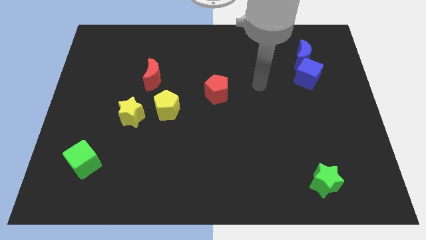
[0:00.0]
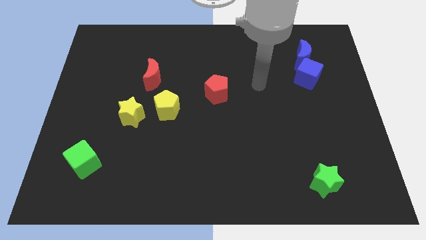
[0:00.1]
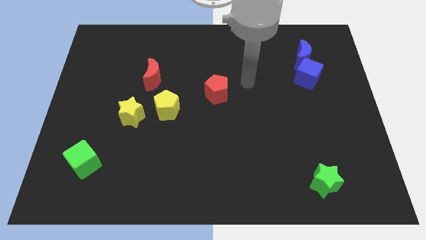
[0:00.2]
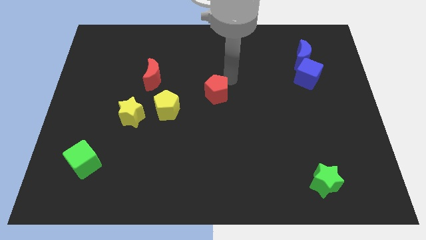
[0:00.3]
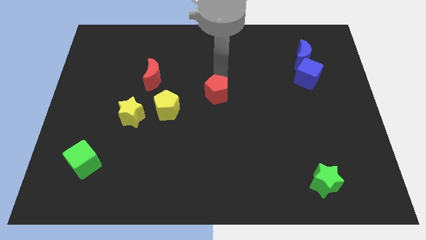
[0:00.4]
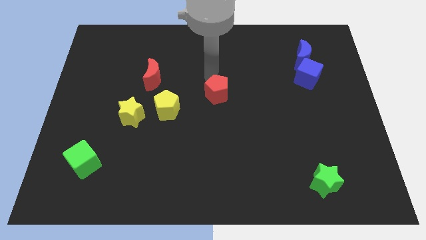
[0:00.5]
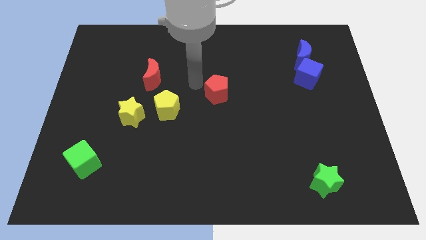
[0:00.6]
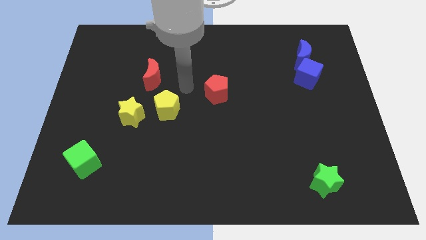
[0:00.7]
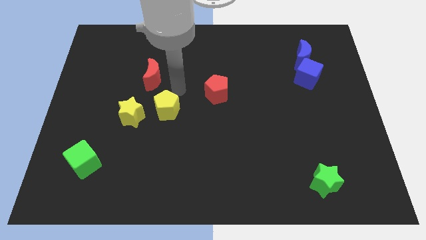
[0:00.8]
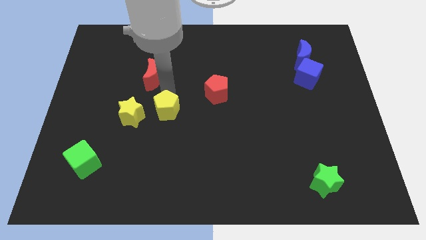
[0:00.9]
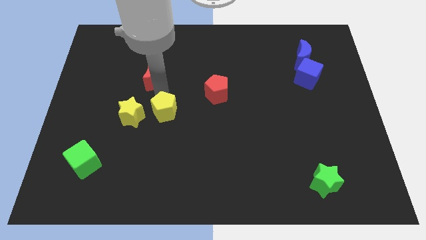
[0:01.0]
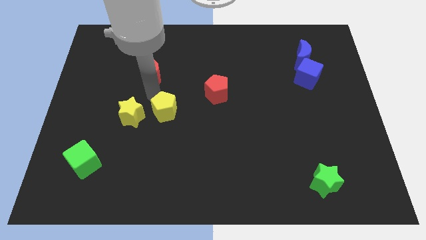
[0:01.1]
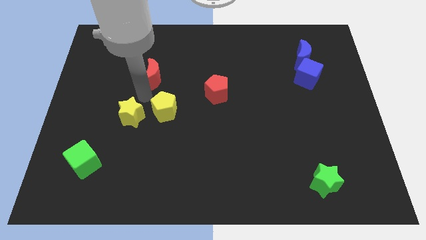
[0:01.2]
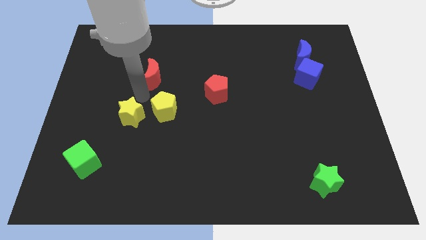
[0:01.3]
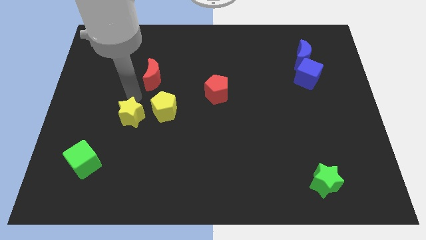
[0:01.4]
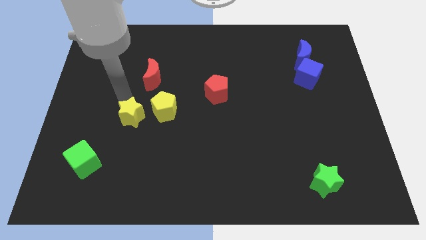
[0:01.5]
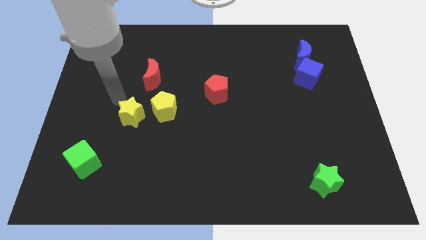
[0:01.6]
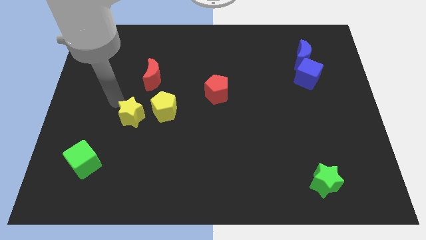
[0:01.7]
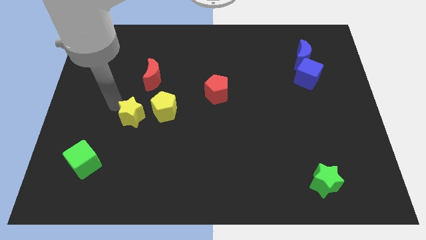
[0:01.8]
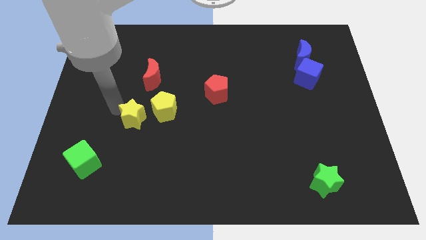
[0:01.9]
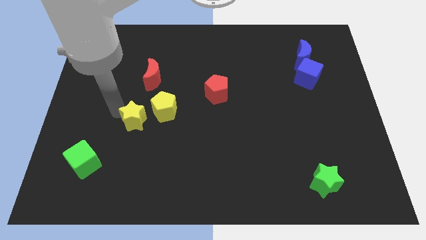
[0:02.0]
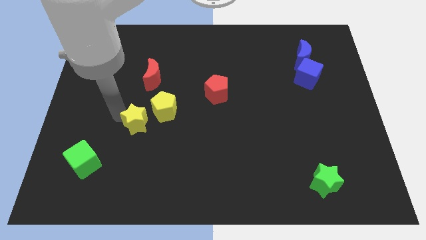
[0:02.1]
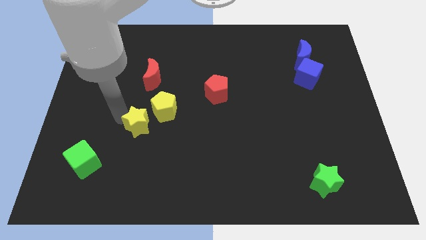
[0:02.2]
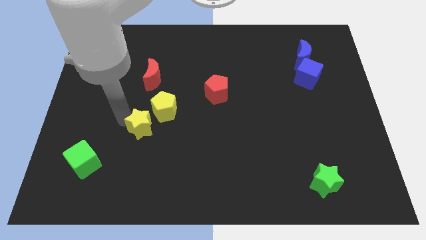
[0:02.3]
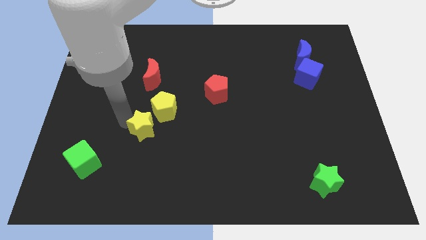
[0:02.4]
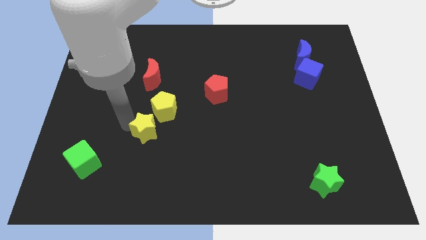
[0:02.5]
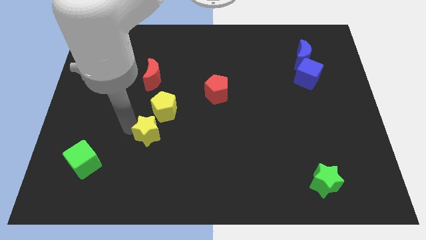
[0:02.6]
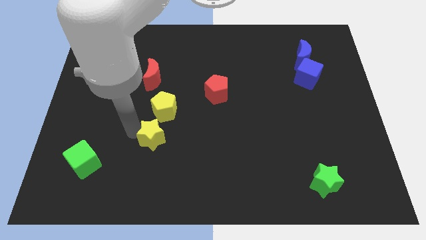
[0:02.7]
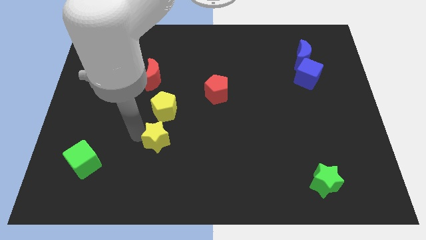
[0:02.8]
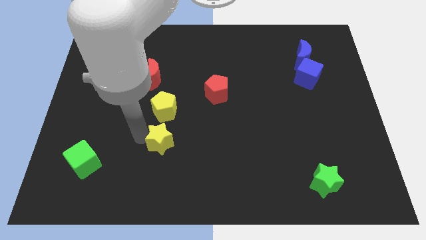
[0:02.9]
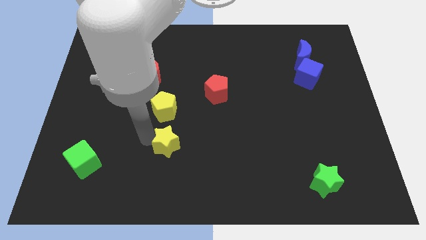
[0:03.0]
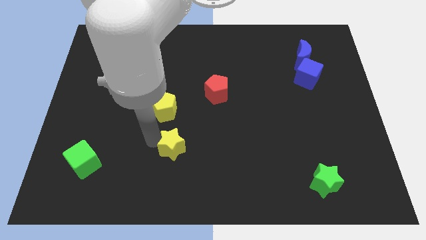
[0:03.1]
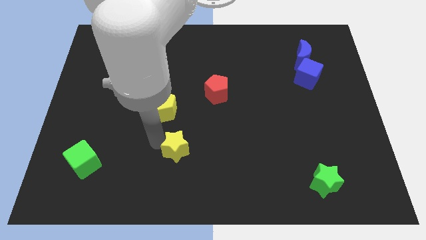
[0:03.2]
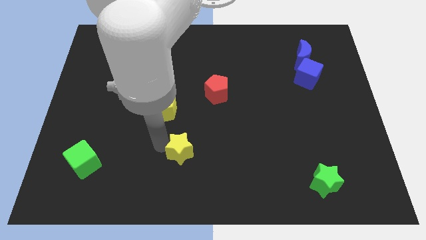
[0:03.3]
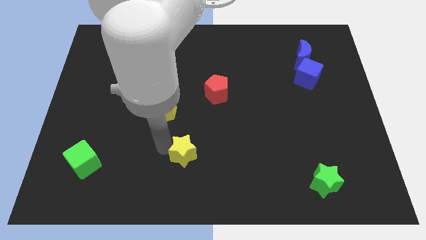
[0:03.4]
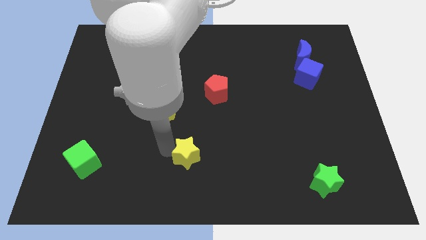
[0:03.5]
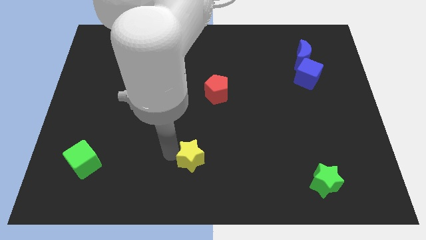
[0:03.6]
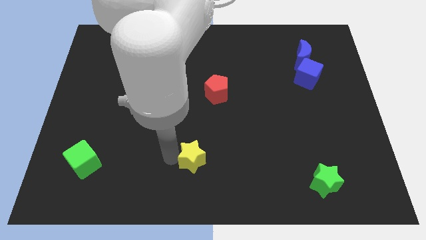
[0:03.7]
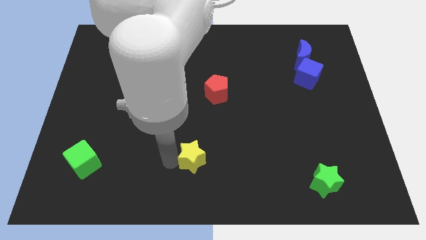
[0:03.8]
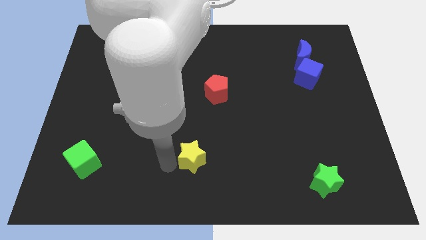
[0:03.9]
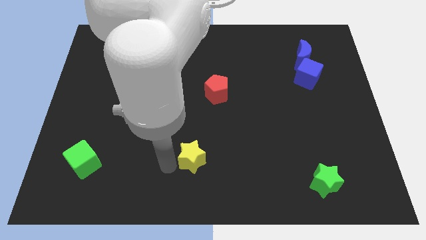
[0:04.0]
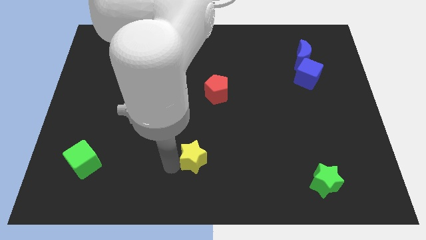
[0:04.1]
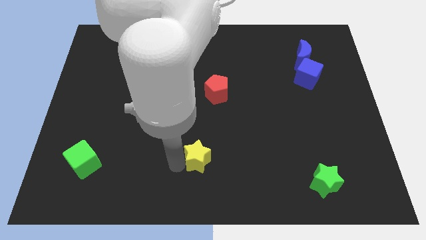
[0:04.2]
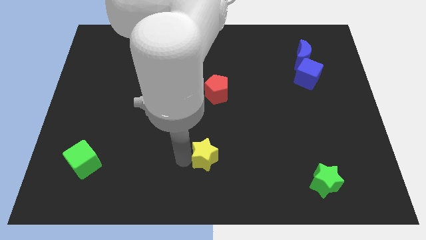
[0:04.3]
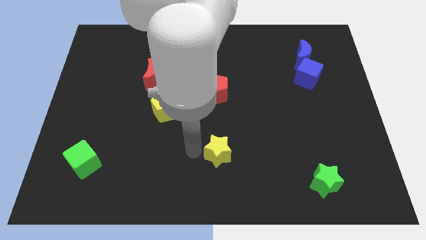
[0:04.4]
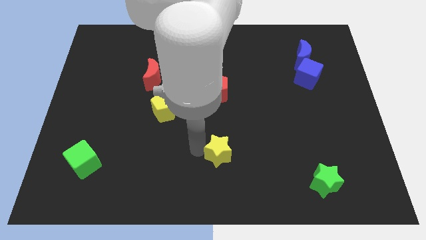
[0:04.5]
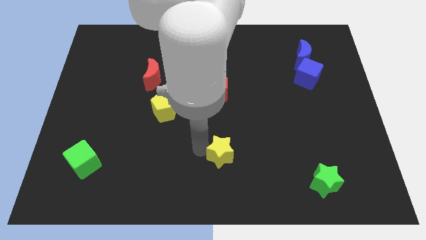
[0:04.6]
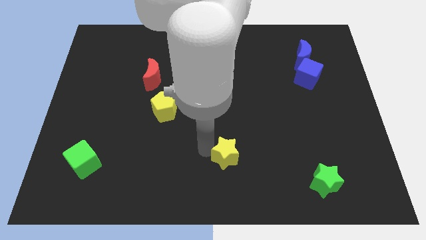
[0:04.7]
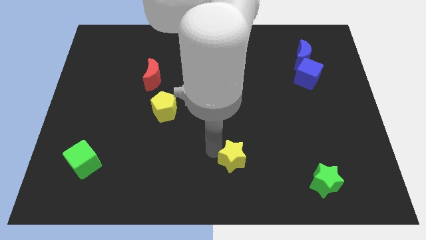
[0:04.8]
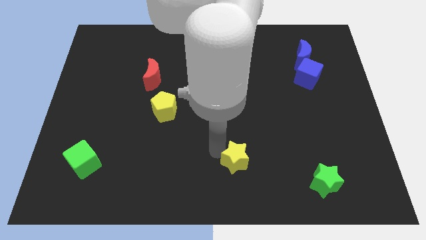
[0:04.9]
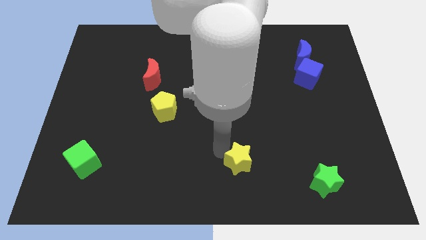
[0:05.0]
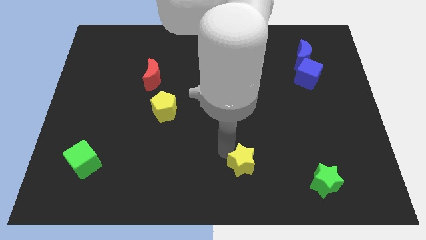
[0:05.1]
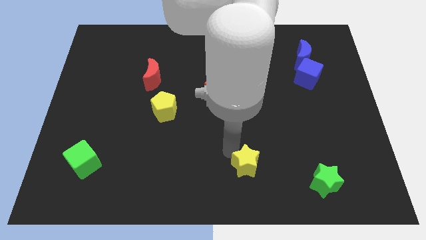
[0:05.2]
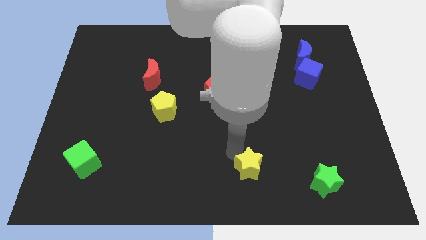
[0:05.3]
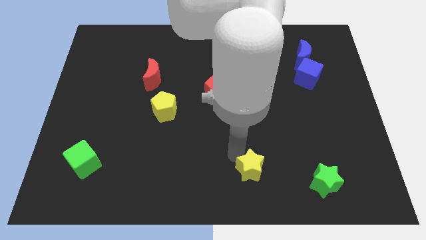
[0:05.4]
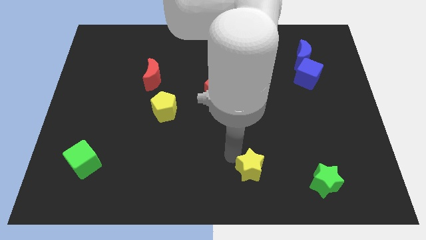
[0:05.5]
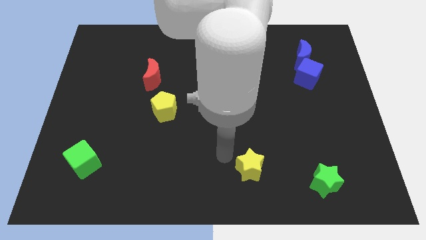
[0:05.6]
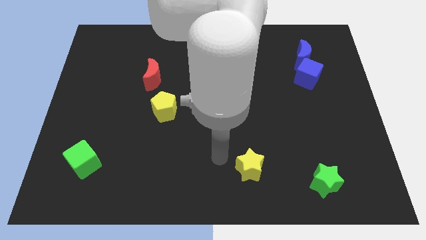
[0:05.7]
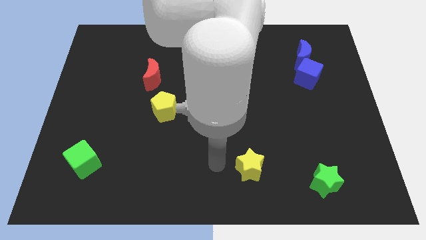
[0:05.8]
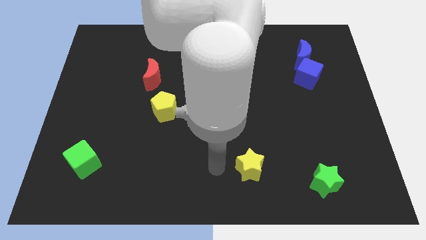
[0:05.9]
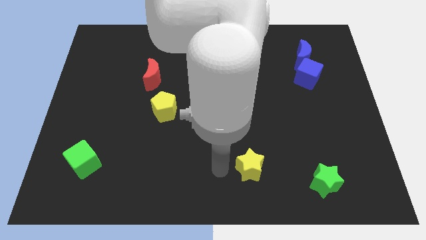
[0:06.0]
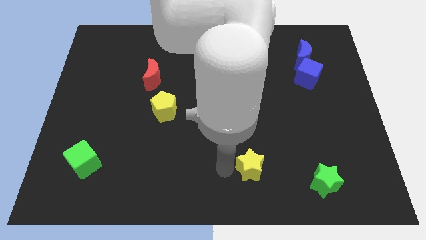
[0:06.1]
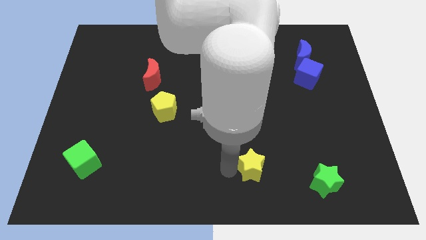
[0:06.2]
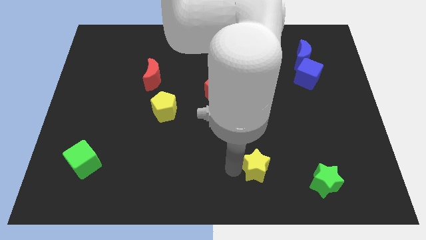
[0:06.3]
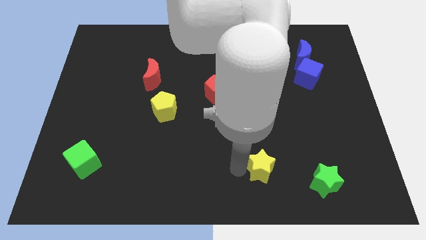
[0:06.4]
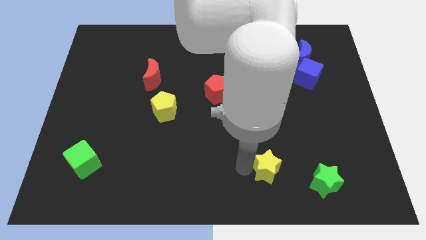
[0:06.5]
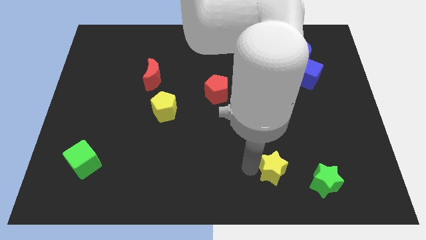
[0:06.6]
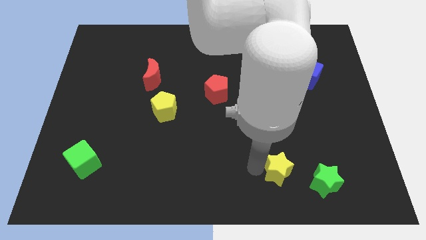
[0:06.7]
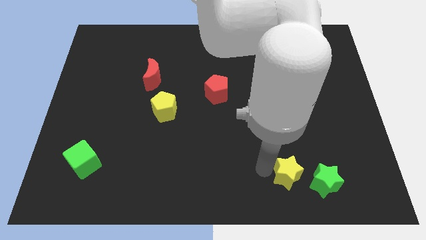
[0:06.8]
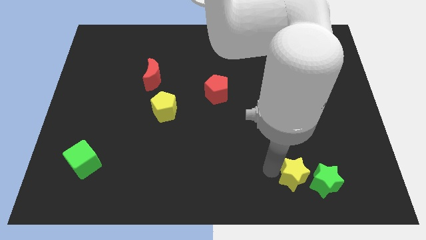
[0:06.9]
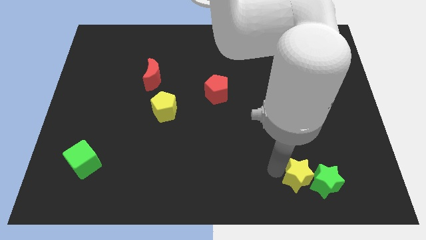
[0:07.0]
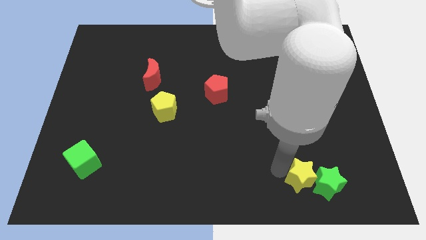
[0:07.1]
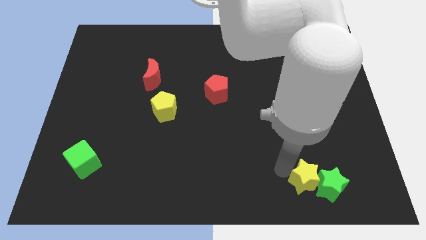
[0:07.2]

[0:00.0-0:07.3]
slide the yellow star close to the green star

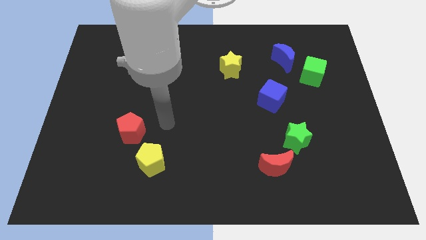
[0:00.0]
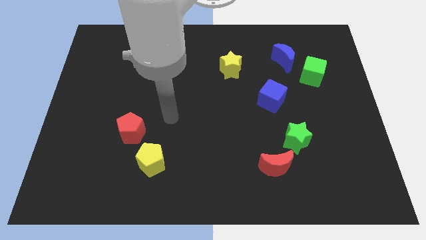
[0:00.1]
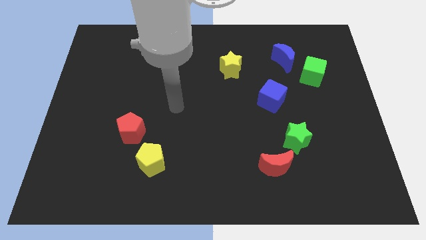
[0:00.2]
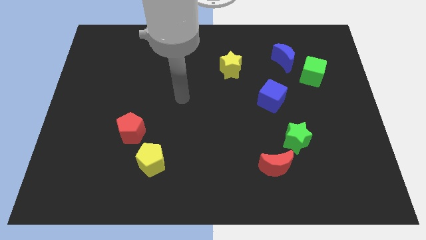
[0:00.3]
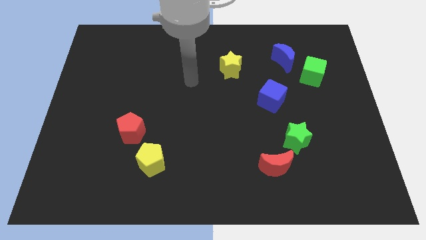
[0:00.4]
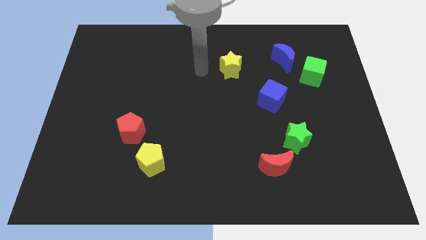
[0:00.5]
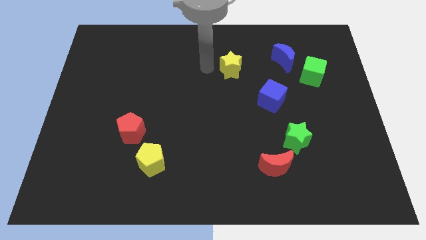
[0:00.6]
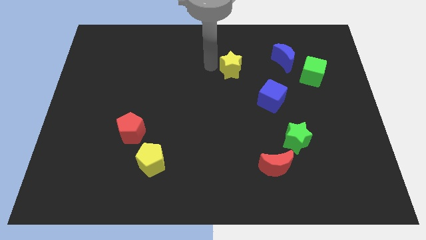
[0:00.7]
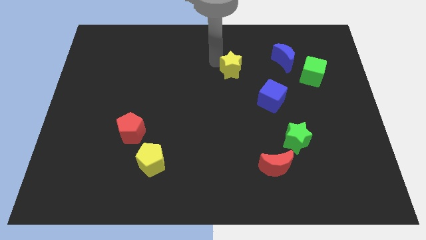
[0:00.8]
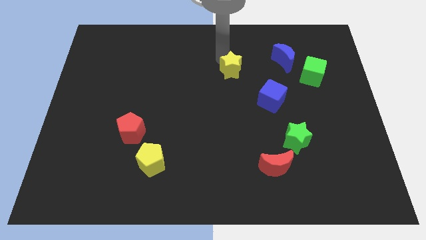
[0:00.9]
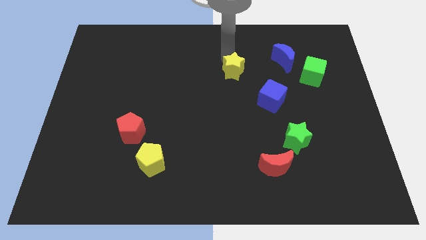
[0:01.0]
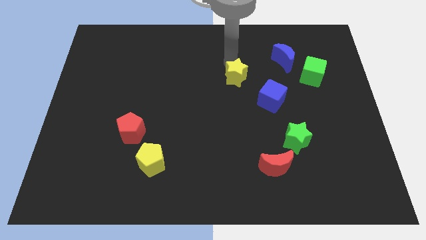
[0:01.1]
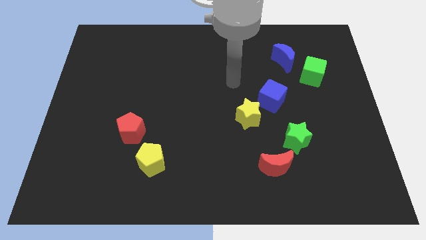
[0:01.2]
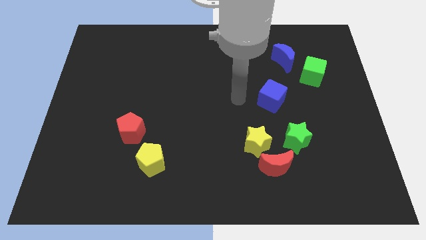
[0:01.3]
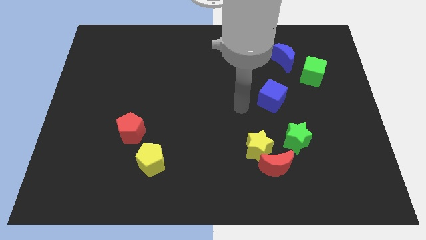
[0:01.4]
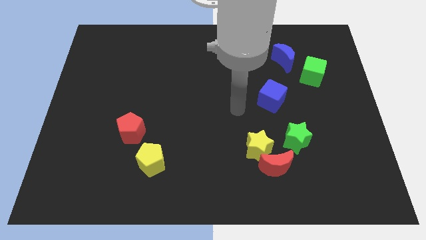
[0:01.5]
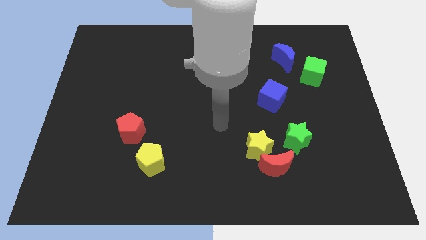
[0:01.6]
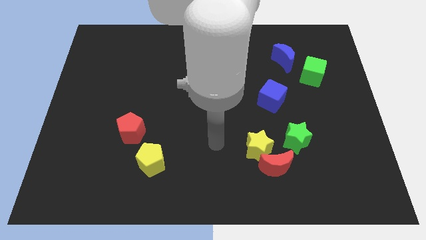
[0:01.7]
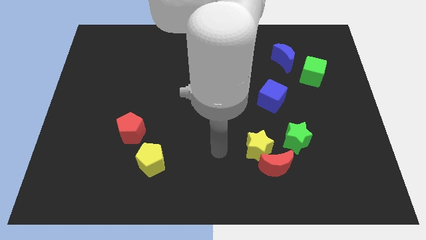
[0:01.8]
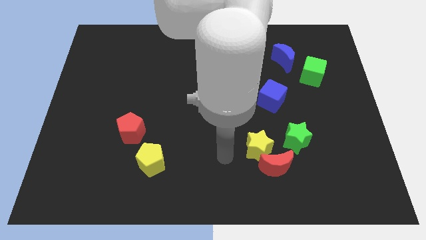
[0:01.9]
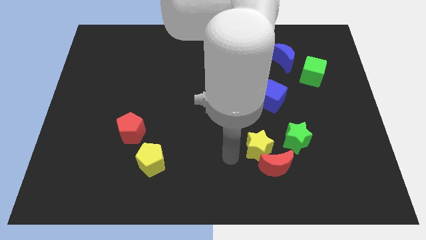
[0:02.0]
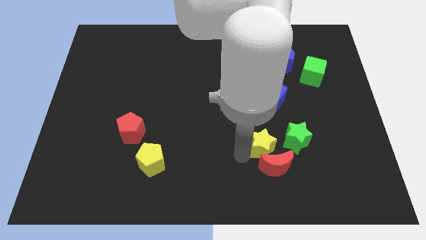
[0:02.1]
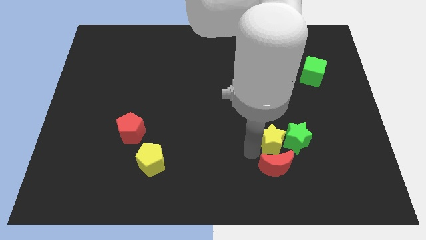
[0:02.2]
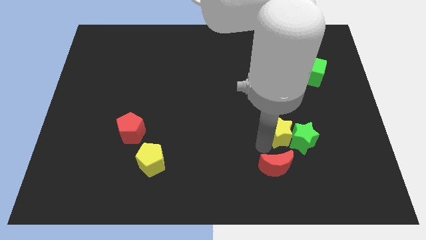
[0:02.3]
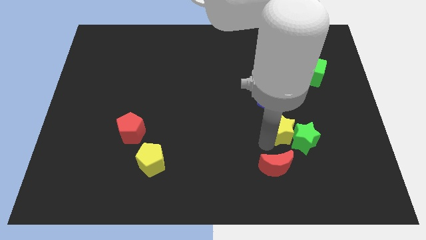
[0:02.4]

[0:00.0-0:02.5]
slide the yellow star towards the green star
